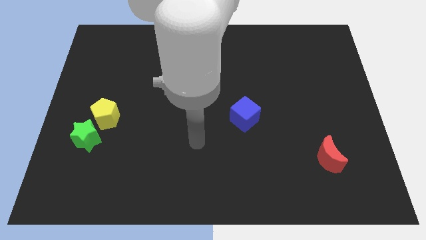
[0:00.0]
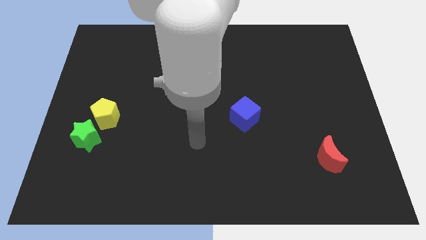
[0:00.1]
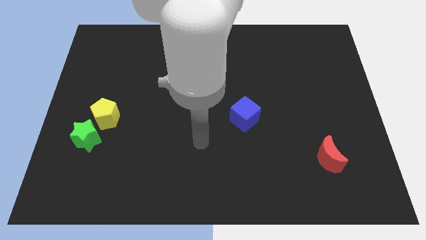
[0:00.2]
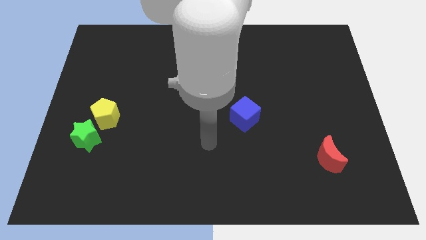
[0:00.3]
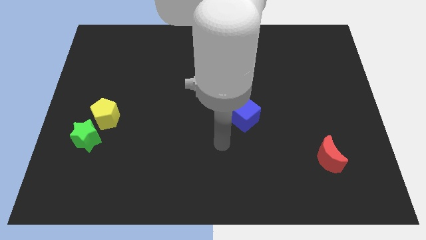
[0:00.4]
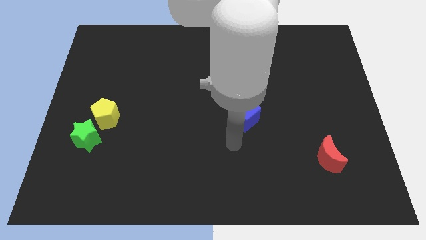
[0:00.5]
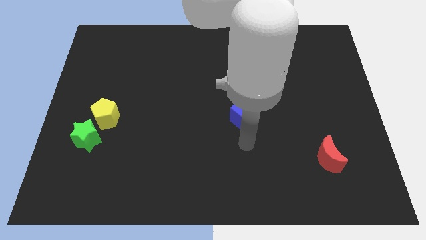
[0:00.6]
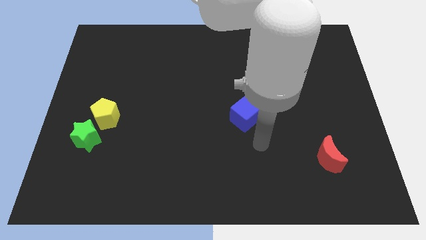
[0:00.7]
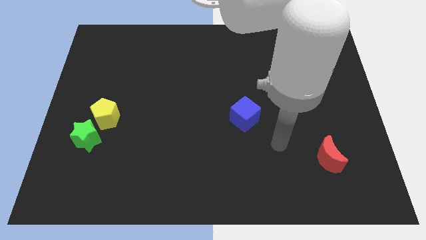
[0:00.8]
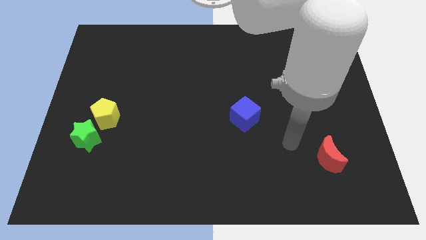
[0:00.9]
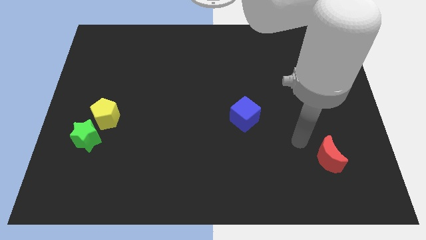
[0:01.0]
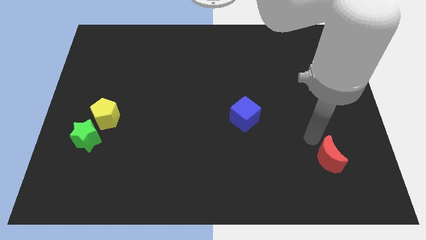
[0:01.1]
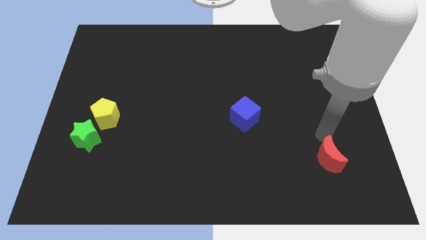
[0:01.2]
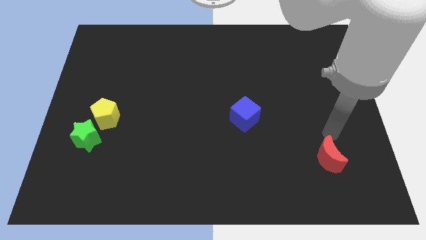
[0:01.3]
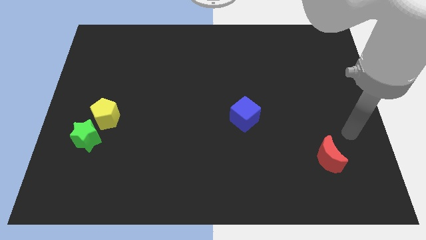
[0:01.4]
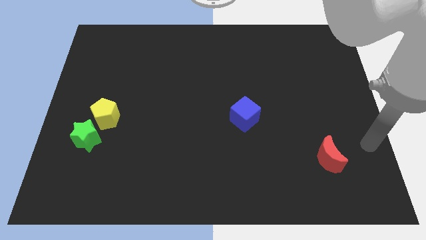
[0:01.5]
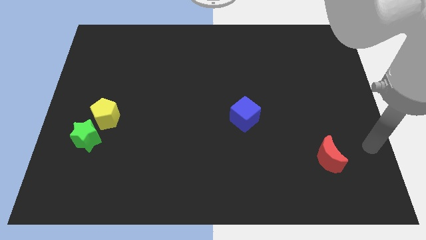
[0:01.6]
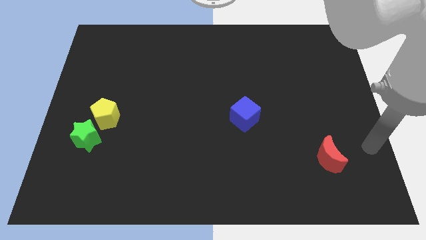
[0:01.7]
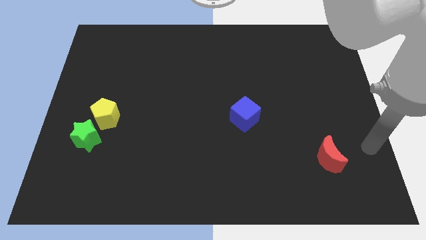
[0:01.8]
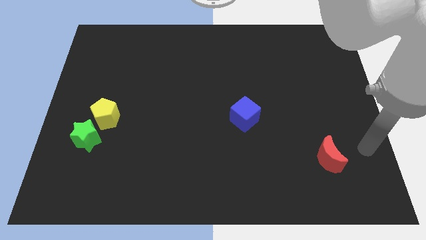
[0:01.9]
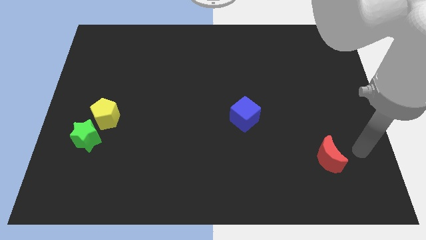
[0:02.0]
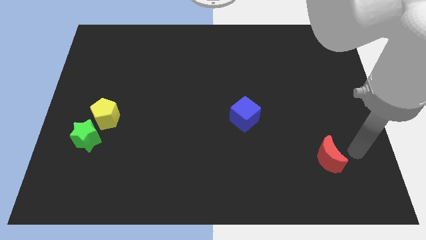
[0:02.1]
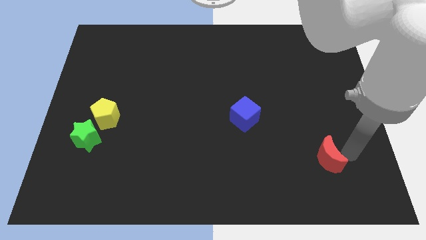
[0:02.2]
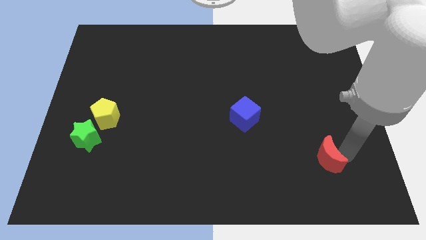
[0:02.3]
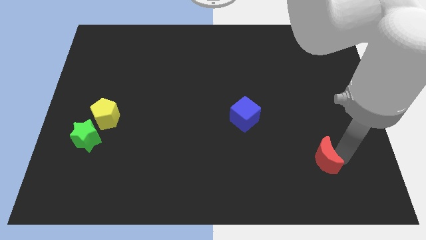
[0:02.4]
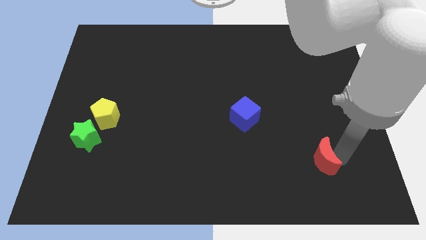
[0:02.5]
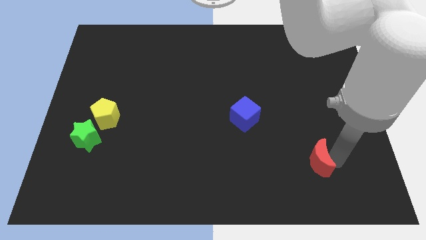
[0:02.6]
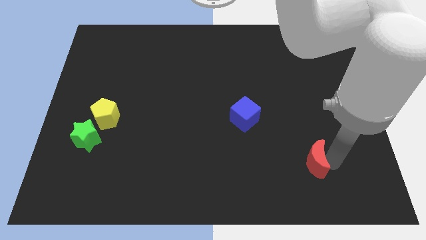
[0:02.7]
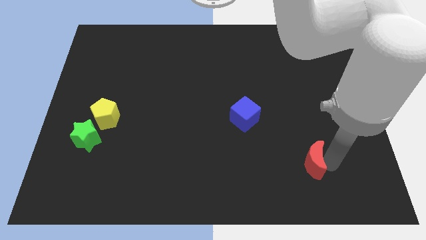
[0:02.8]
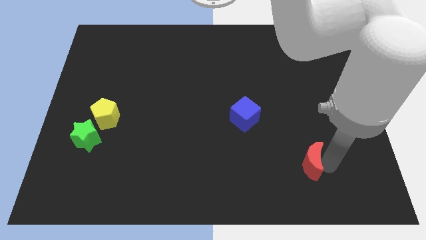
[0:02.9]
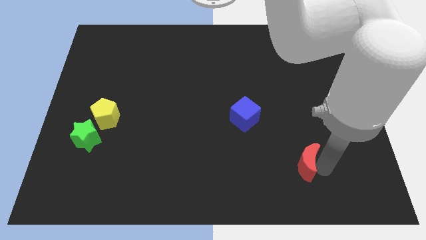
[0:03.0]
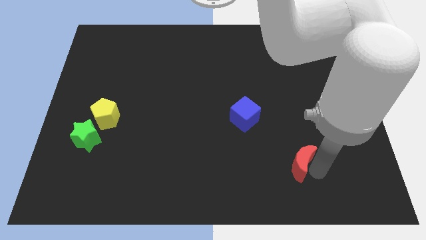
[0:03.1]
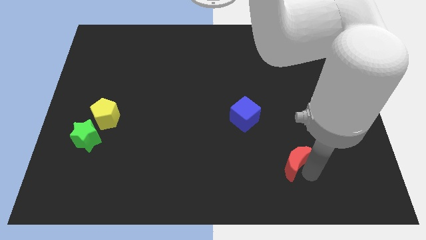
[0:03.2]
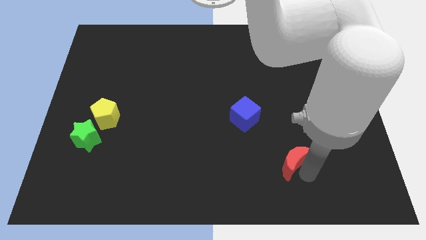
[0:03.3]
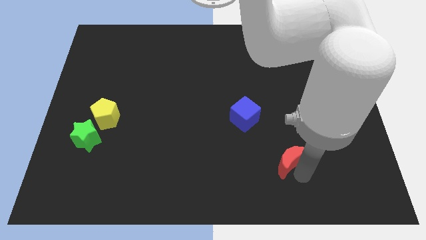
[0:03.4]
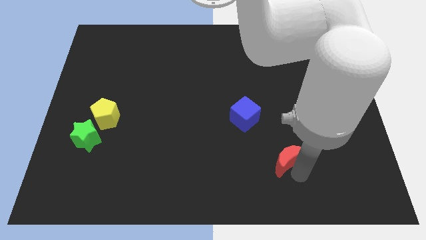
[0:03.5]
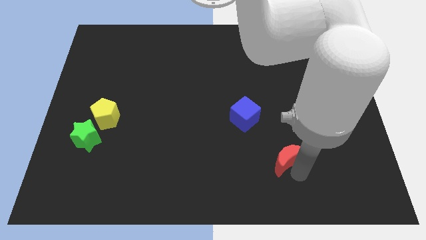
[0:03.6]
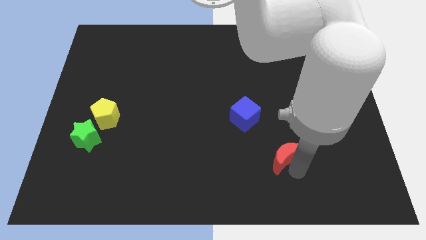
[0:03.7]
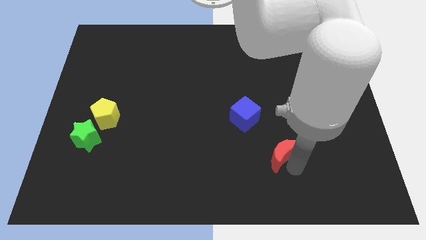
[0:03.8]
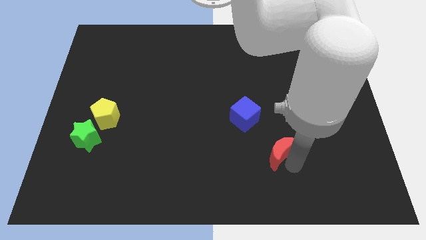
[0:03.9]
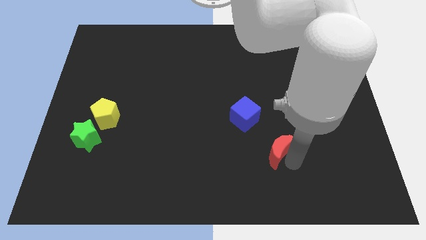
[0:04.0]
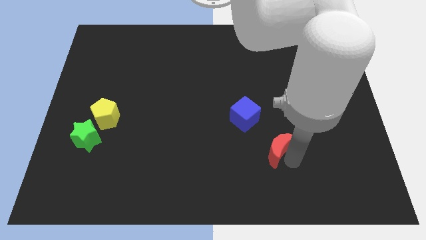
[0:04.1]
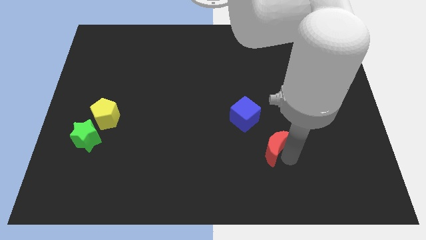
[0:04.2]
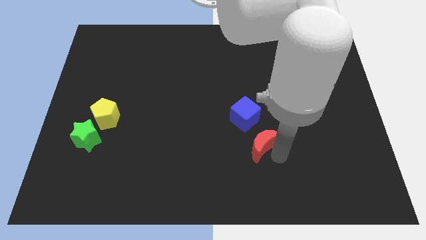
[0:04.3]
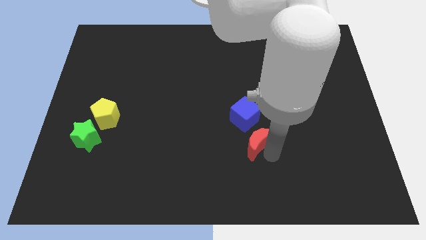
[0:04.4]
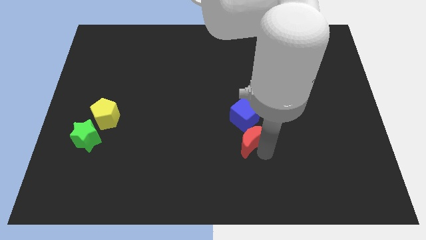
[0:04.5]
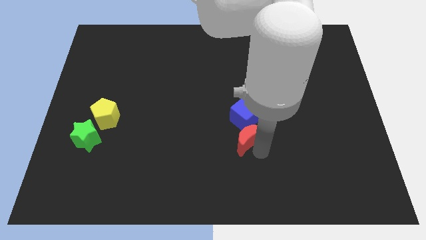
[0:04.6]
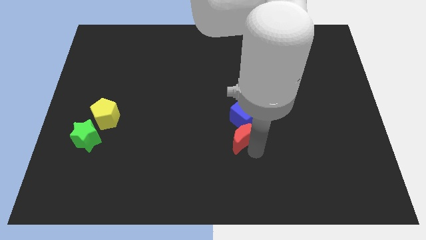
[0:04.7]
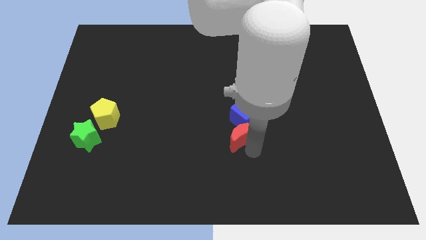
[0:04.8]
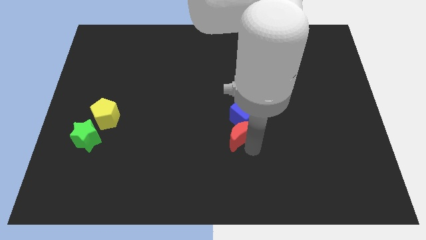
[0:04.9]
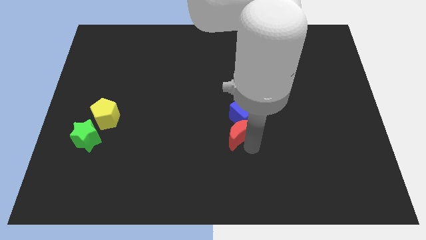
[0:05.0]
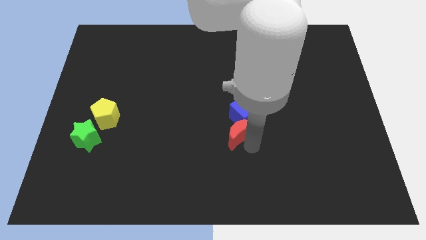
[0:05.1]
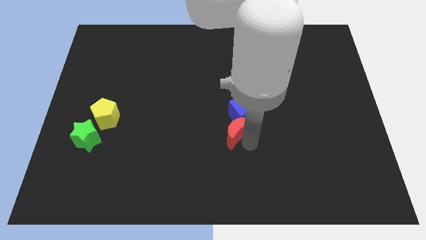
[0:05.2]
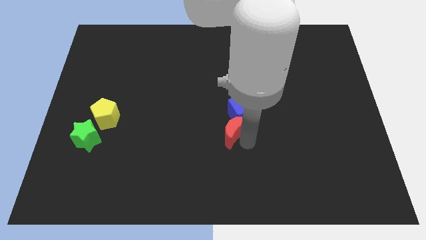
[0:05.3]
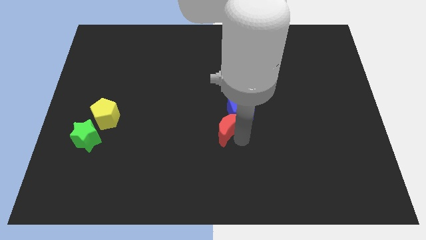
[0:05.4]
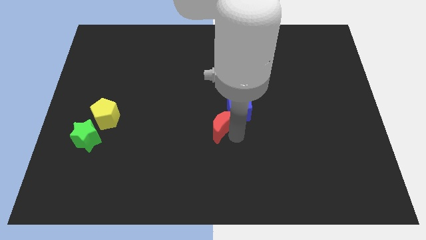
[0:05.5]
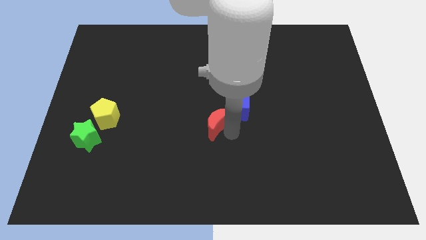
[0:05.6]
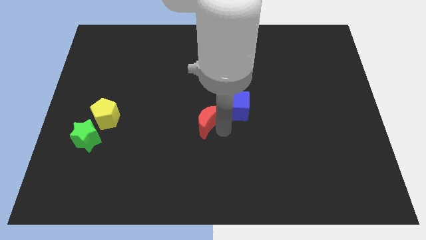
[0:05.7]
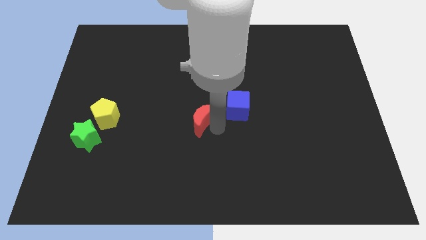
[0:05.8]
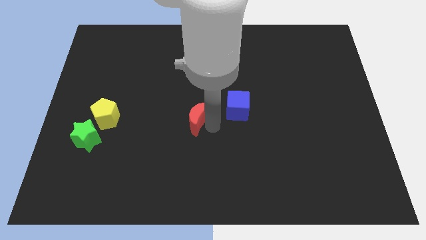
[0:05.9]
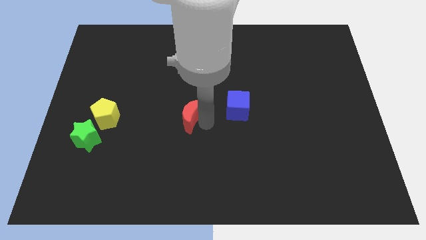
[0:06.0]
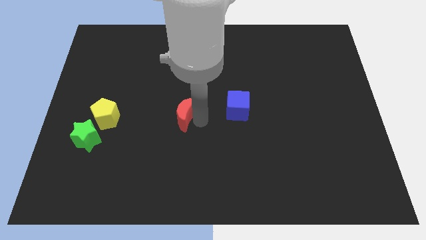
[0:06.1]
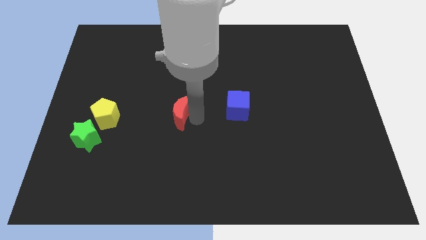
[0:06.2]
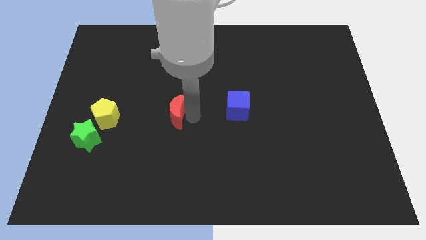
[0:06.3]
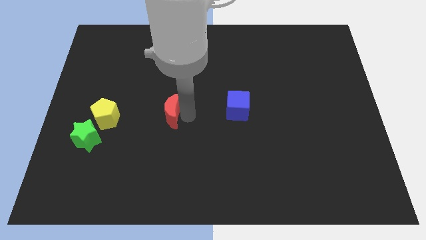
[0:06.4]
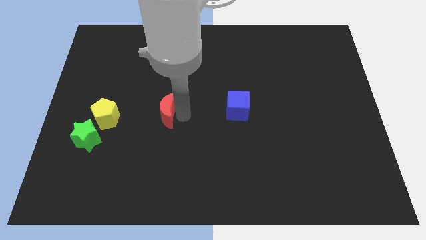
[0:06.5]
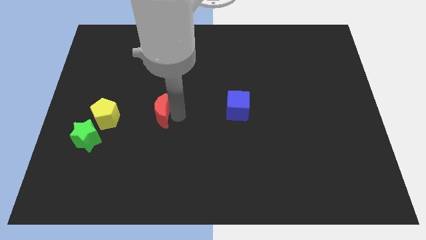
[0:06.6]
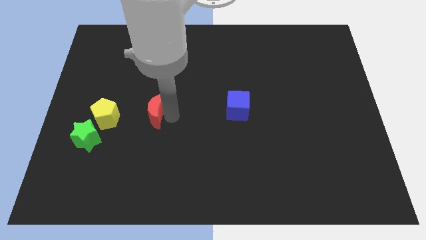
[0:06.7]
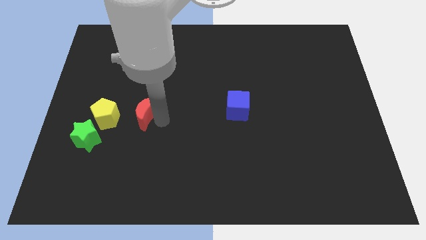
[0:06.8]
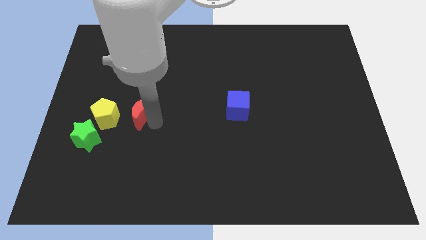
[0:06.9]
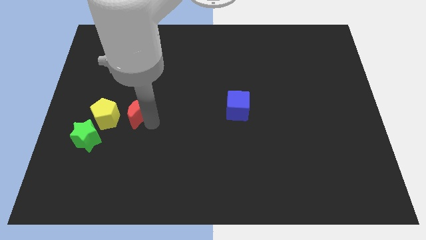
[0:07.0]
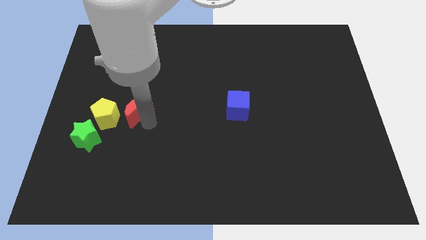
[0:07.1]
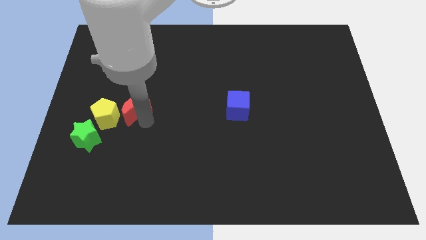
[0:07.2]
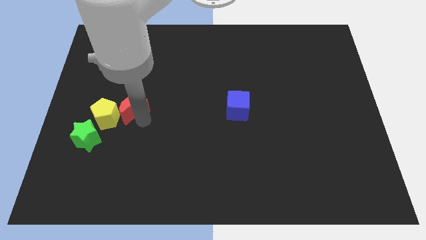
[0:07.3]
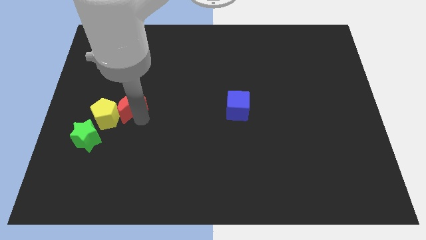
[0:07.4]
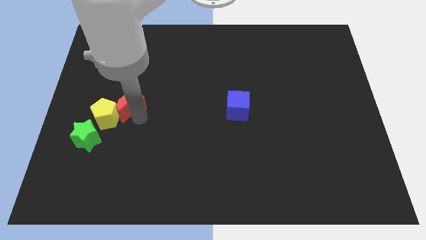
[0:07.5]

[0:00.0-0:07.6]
push the moon next to the pentagon

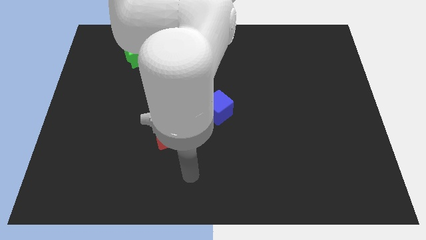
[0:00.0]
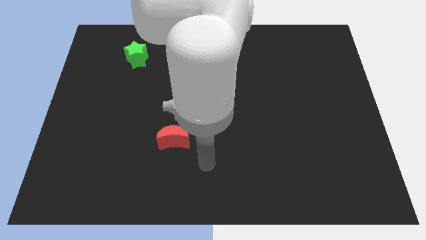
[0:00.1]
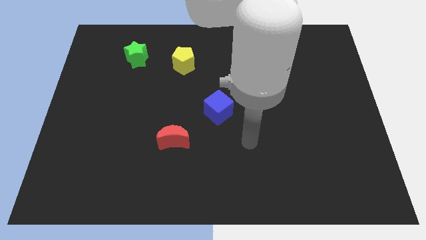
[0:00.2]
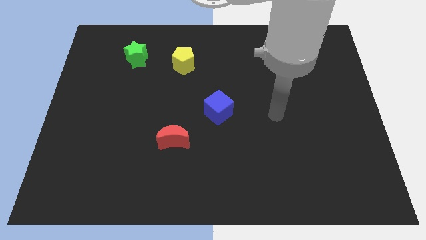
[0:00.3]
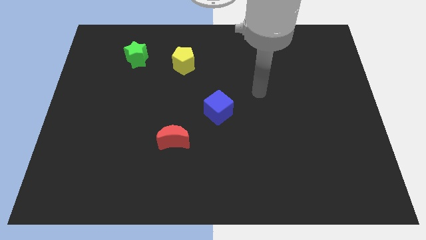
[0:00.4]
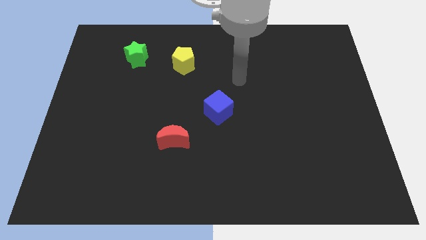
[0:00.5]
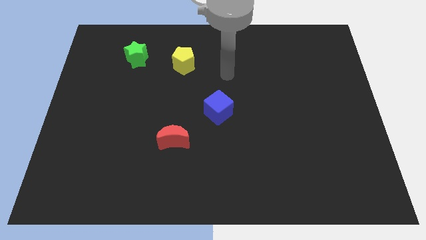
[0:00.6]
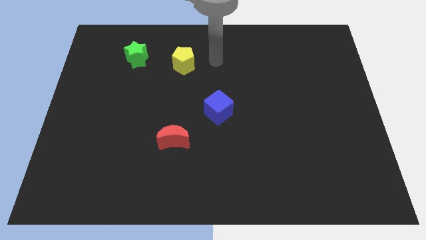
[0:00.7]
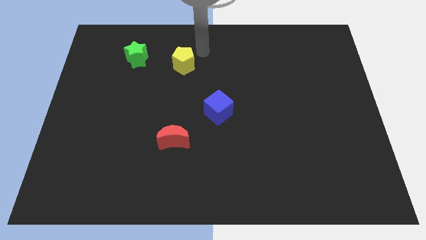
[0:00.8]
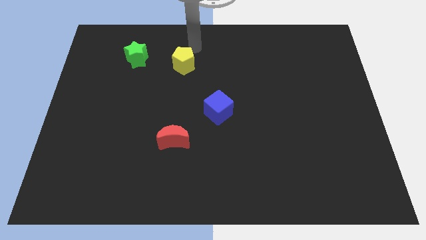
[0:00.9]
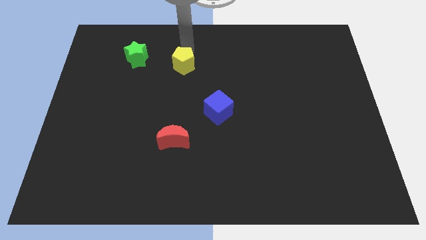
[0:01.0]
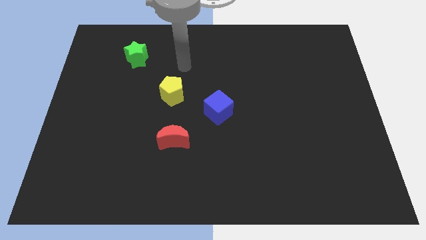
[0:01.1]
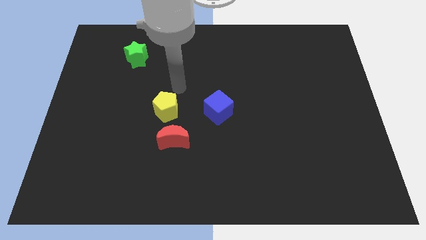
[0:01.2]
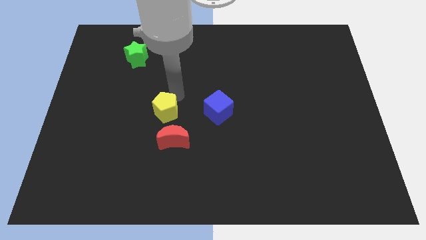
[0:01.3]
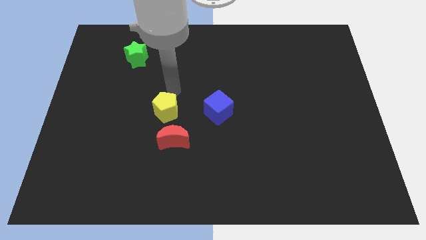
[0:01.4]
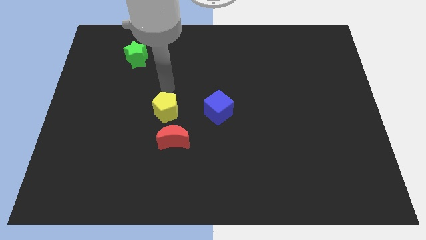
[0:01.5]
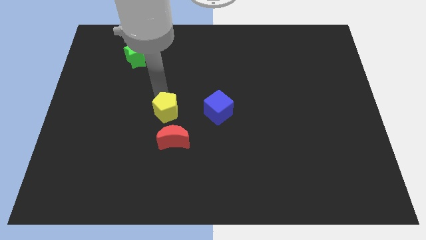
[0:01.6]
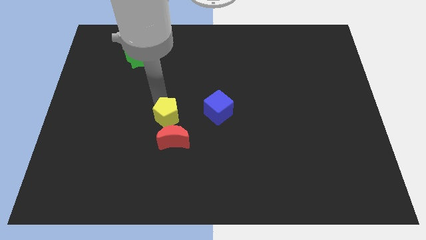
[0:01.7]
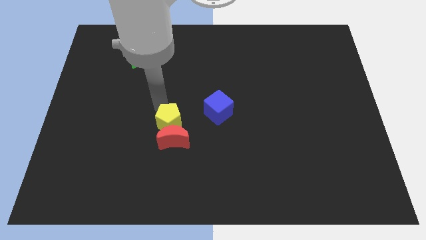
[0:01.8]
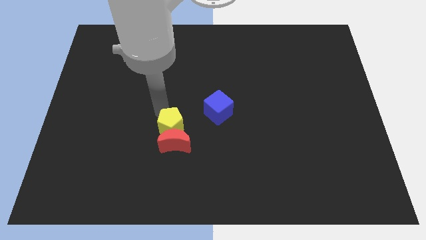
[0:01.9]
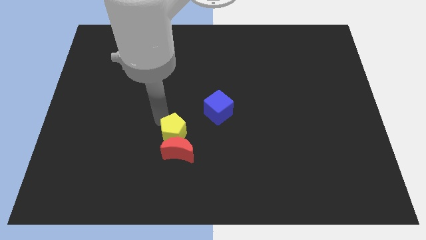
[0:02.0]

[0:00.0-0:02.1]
put the yellow block close to the moon
